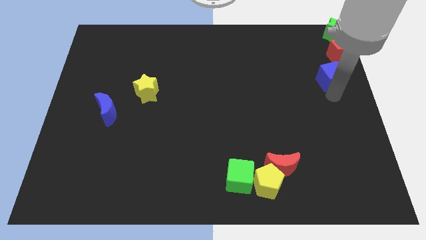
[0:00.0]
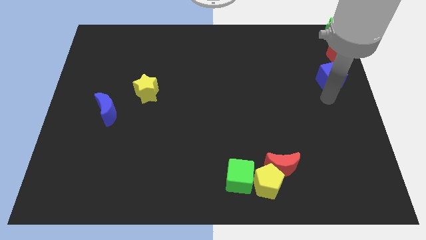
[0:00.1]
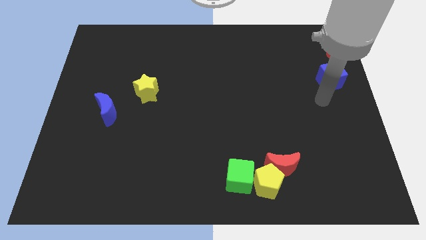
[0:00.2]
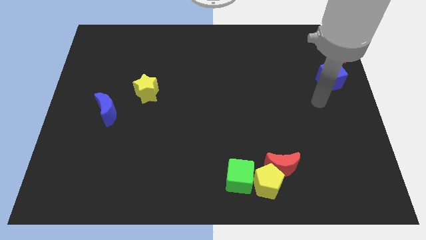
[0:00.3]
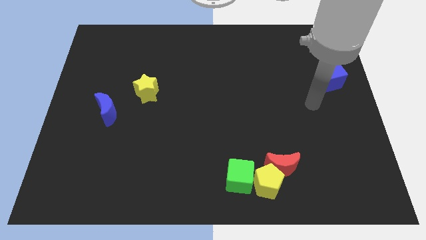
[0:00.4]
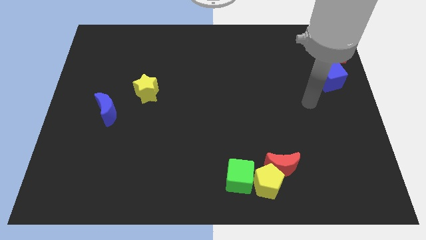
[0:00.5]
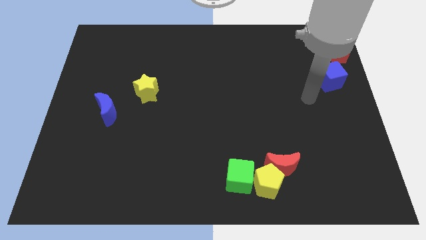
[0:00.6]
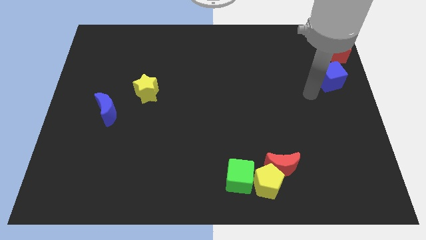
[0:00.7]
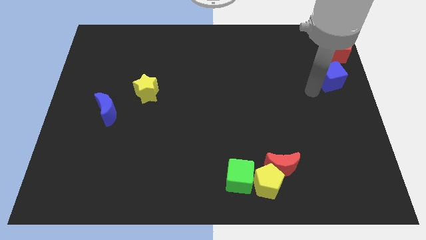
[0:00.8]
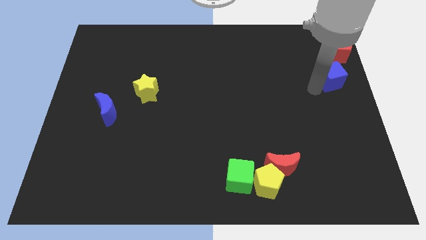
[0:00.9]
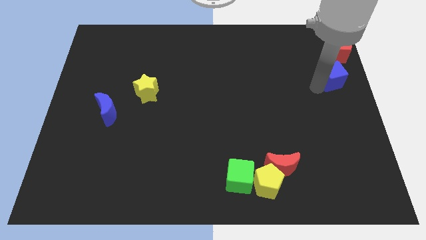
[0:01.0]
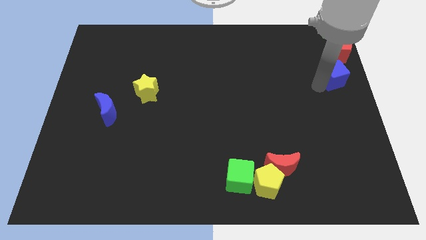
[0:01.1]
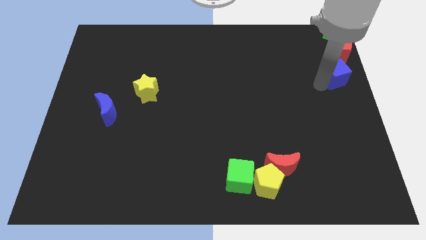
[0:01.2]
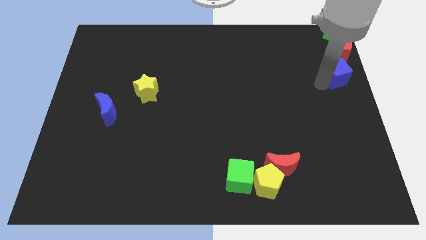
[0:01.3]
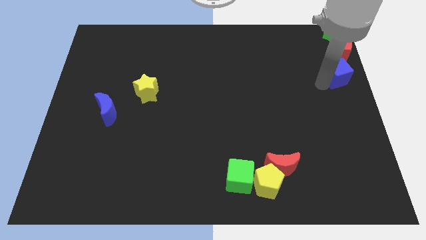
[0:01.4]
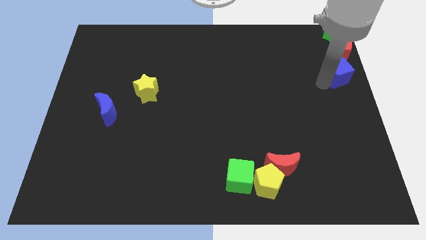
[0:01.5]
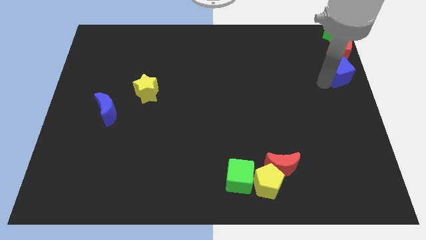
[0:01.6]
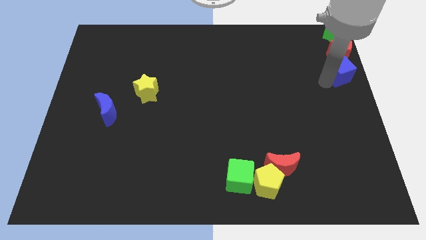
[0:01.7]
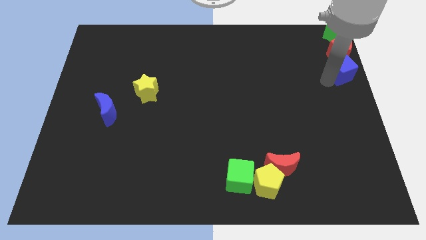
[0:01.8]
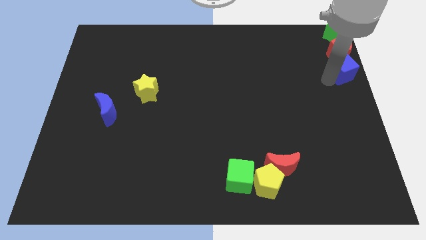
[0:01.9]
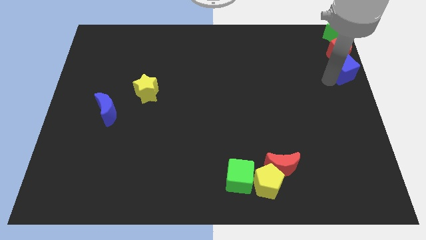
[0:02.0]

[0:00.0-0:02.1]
place the blue cube at the bottom of the red pentagon

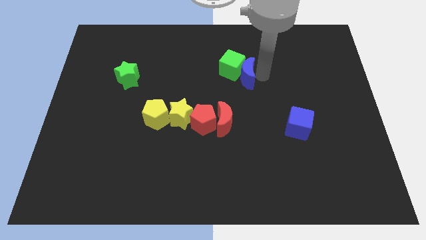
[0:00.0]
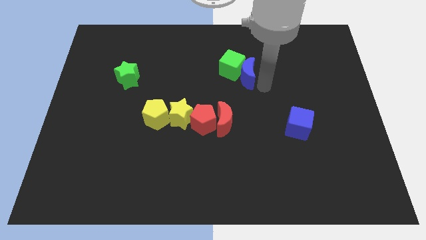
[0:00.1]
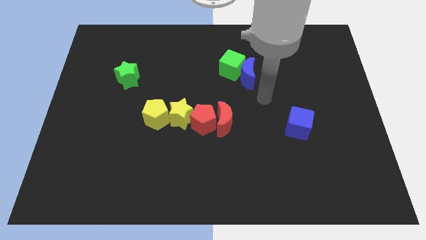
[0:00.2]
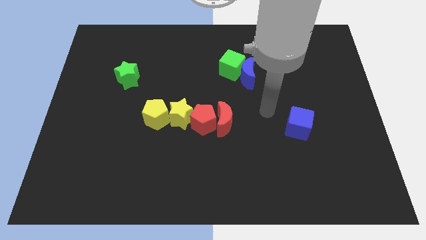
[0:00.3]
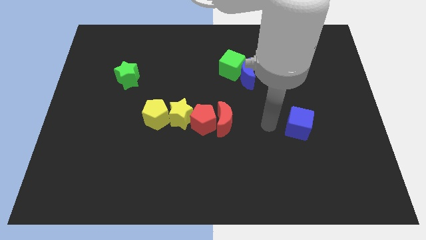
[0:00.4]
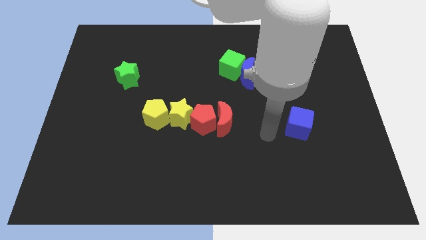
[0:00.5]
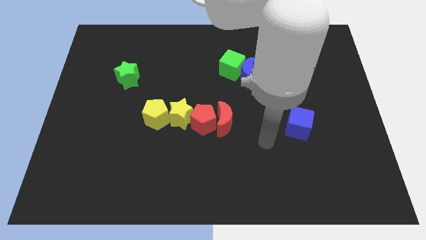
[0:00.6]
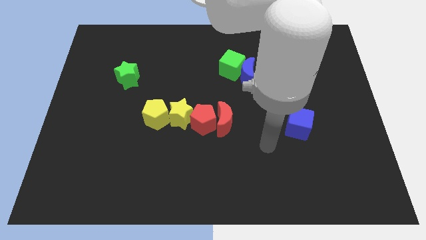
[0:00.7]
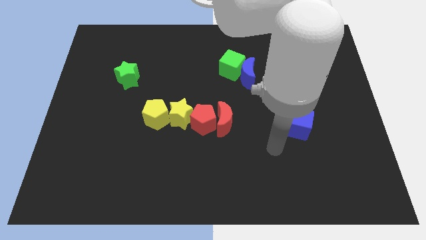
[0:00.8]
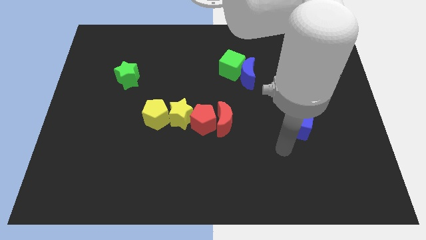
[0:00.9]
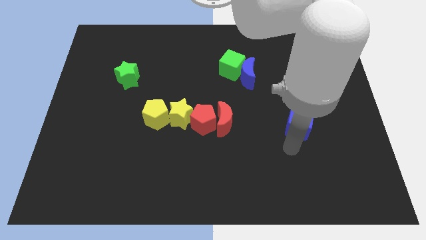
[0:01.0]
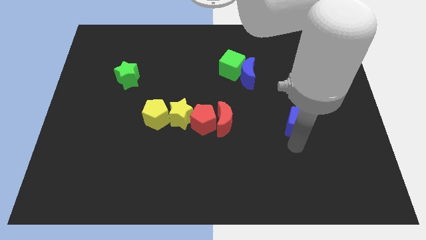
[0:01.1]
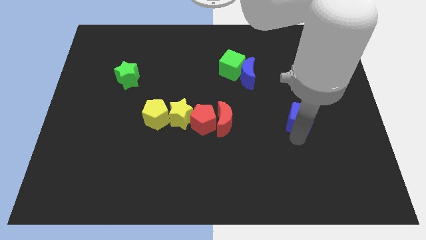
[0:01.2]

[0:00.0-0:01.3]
move your arm away from blue moon

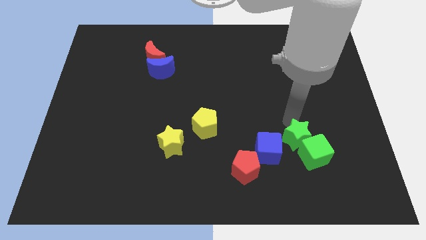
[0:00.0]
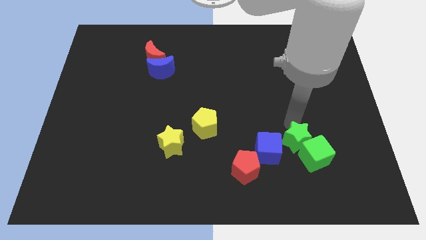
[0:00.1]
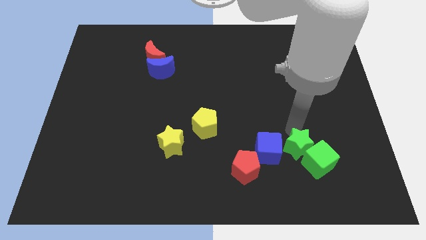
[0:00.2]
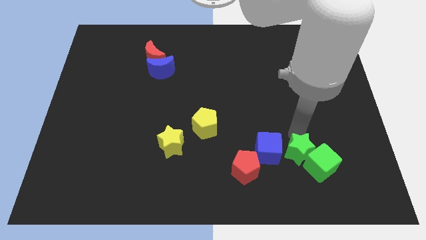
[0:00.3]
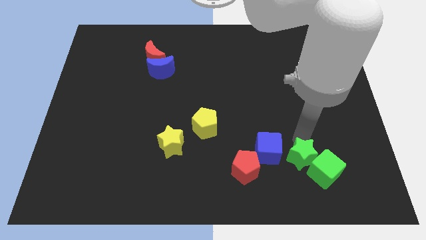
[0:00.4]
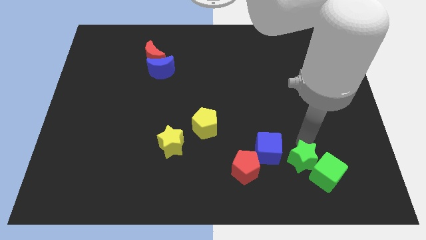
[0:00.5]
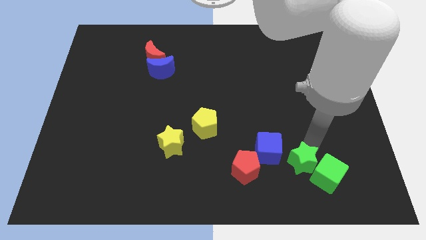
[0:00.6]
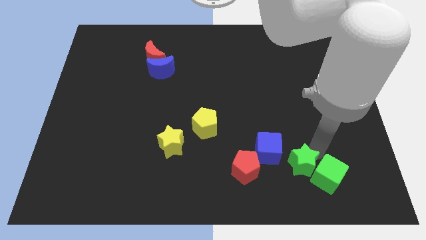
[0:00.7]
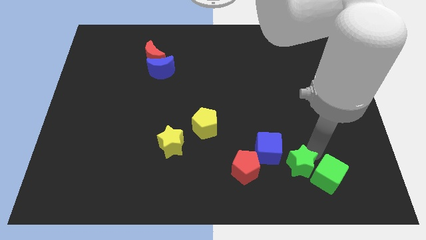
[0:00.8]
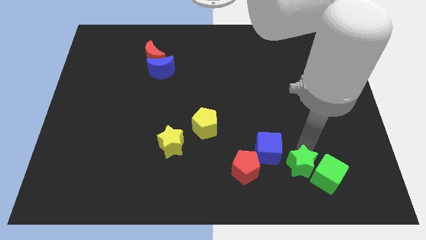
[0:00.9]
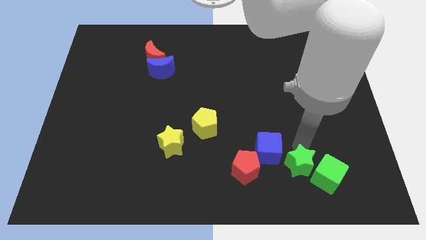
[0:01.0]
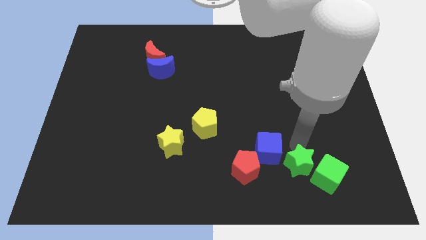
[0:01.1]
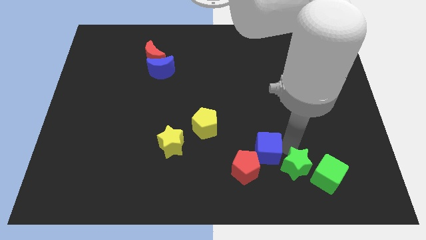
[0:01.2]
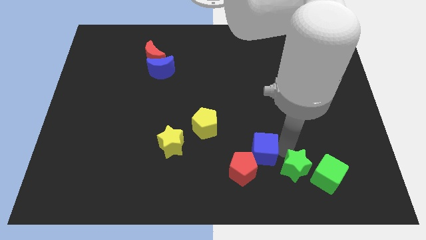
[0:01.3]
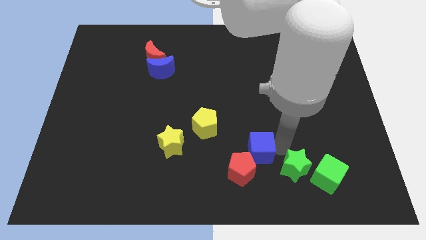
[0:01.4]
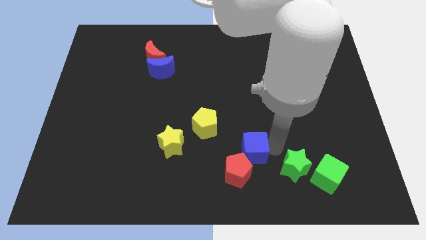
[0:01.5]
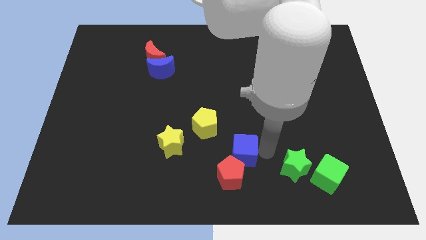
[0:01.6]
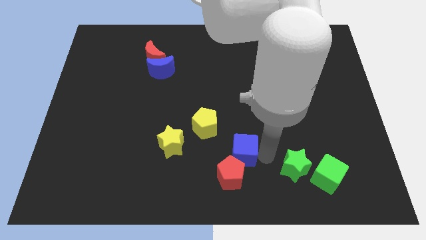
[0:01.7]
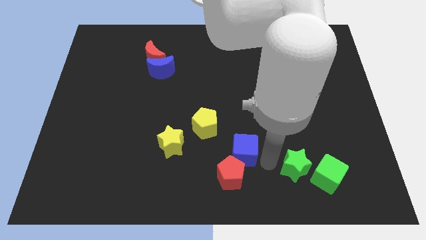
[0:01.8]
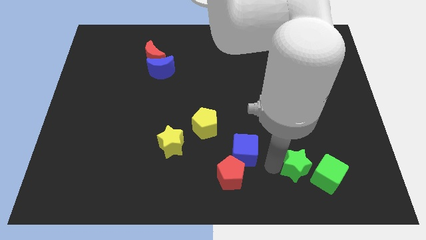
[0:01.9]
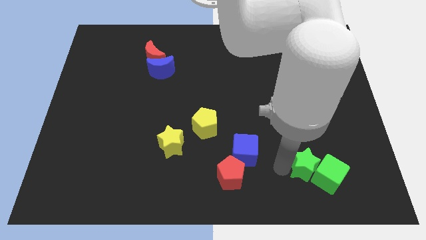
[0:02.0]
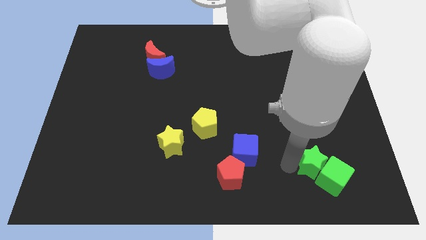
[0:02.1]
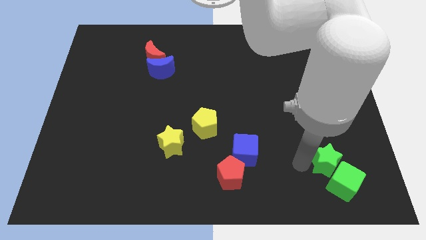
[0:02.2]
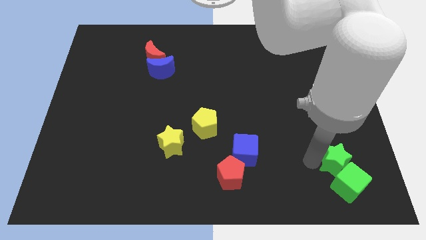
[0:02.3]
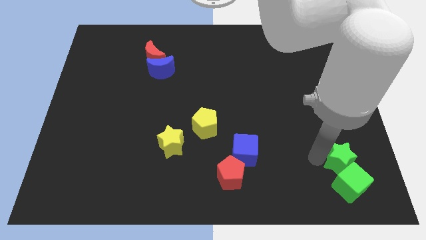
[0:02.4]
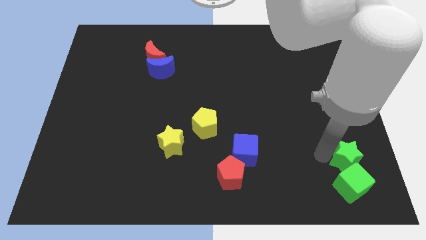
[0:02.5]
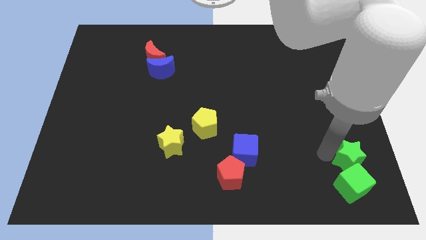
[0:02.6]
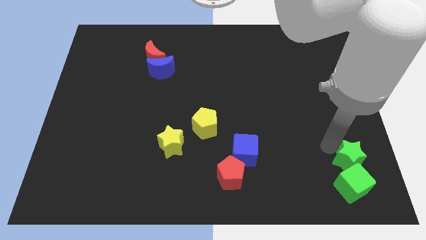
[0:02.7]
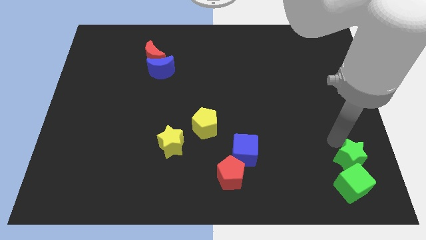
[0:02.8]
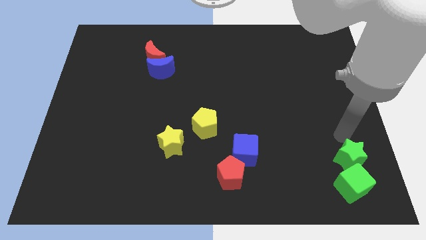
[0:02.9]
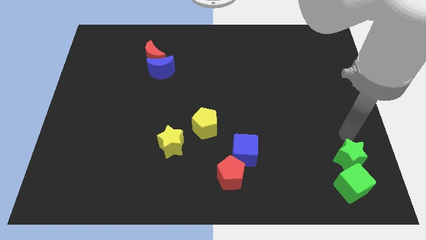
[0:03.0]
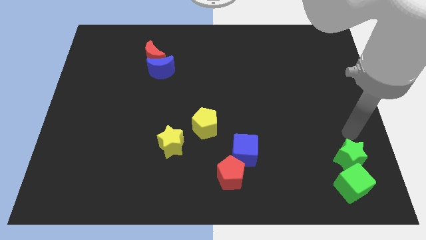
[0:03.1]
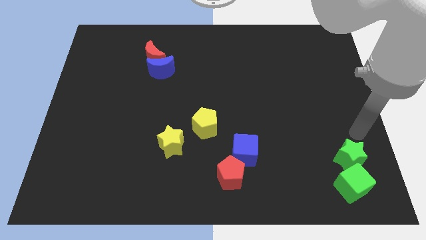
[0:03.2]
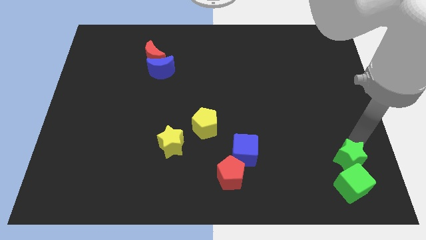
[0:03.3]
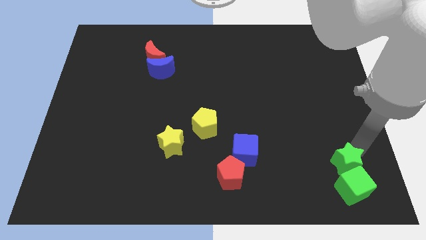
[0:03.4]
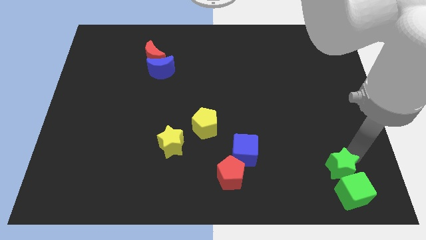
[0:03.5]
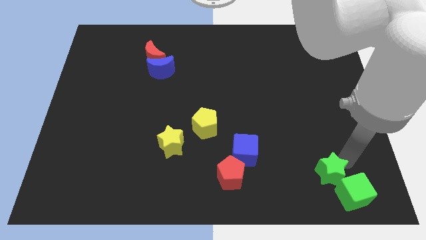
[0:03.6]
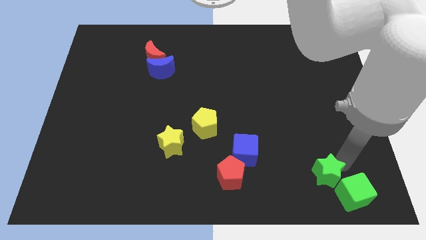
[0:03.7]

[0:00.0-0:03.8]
push the group of green blocks to the bottom right of the board

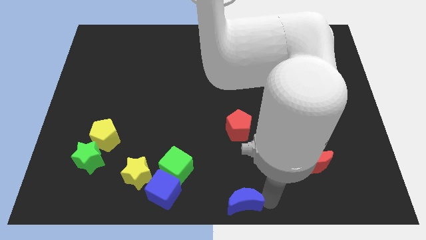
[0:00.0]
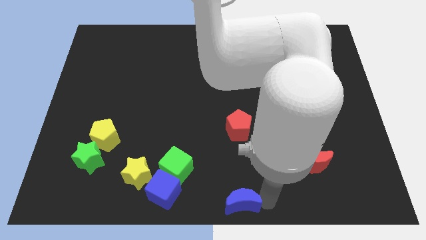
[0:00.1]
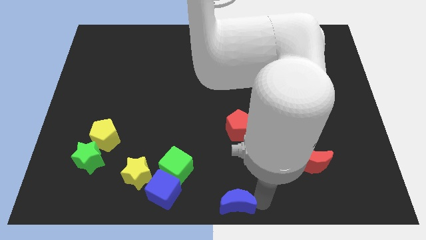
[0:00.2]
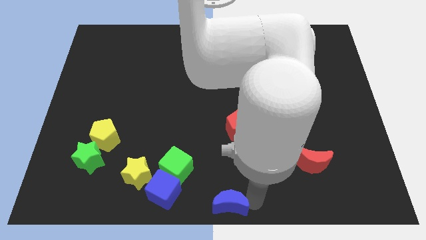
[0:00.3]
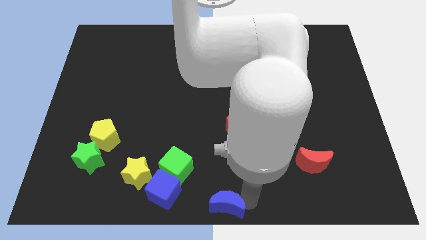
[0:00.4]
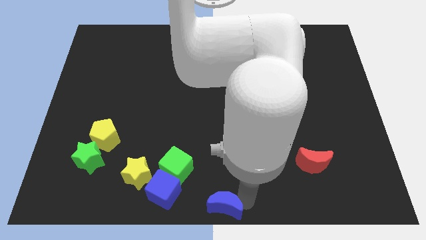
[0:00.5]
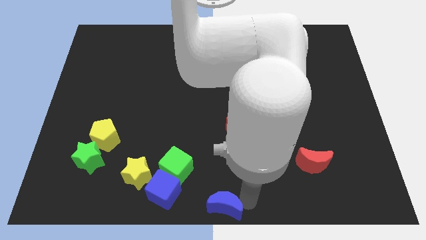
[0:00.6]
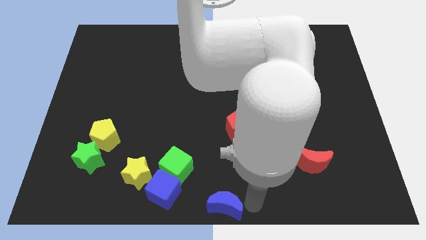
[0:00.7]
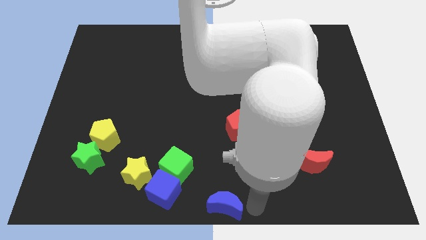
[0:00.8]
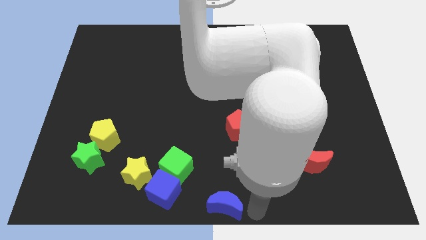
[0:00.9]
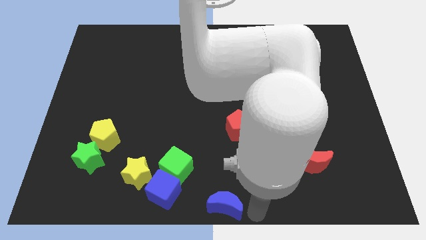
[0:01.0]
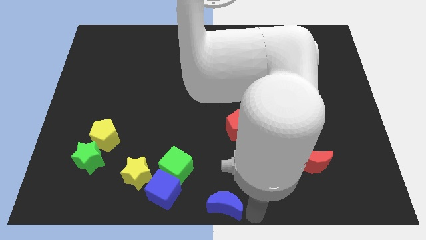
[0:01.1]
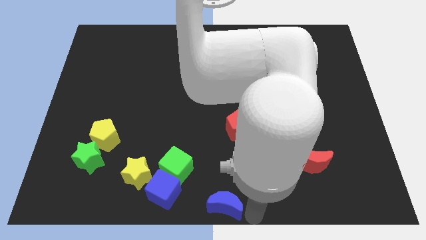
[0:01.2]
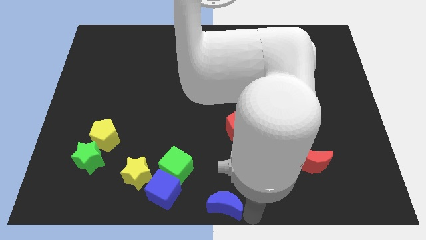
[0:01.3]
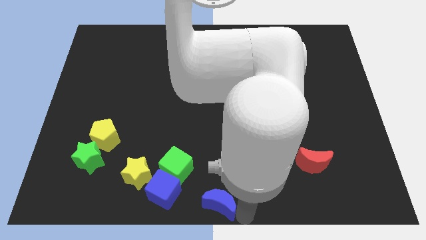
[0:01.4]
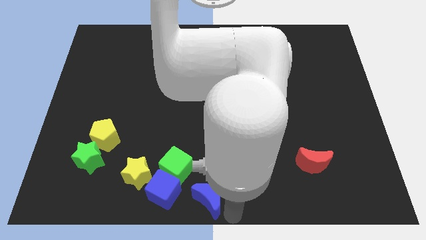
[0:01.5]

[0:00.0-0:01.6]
push the blue crescent to the bottom center of the board
